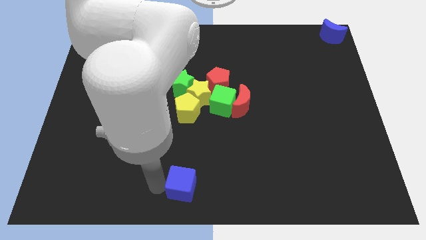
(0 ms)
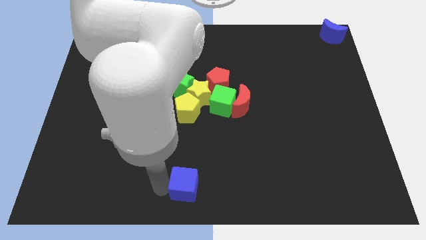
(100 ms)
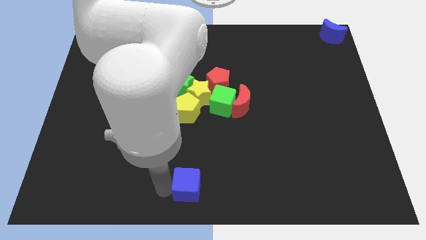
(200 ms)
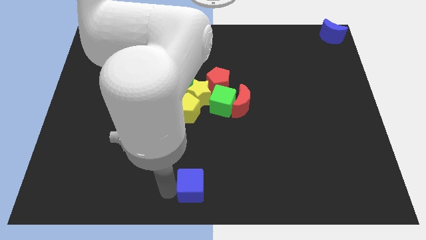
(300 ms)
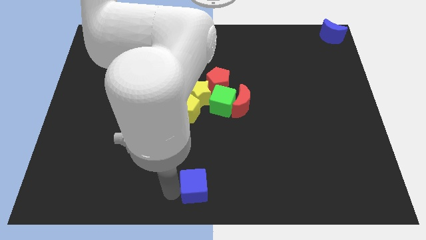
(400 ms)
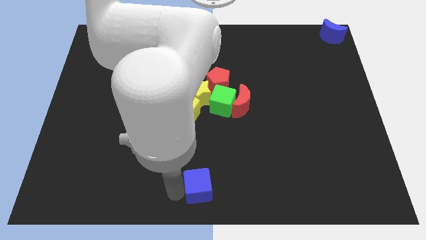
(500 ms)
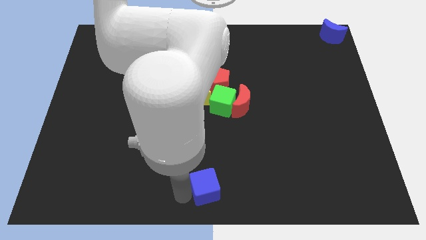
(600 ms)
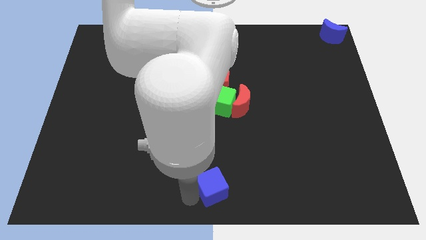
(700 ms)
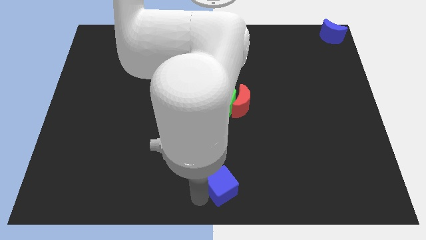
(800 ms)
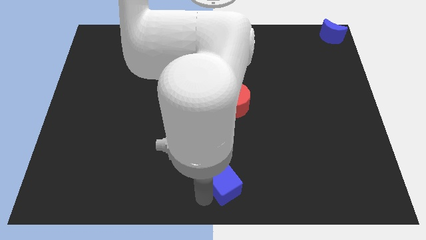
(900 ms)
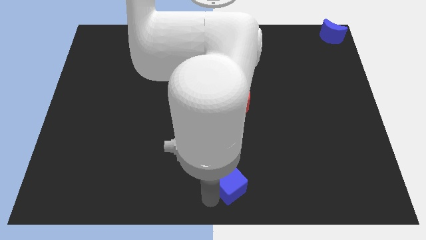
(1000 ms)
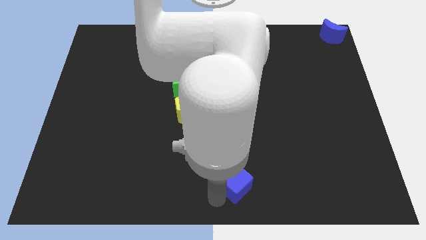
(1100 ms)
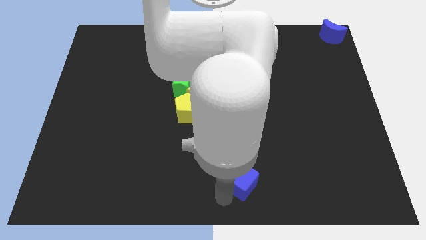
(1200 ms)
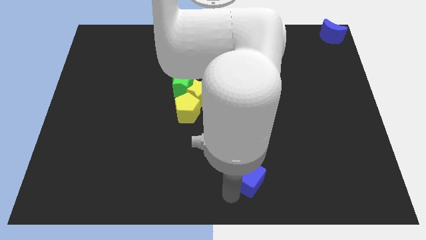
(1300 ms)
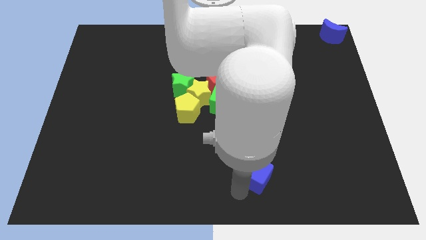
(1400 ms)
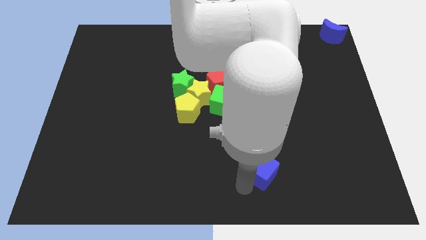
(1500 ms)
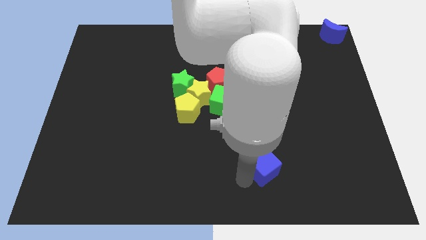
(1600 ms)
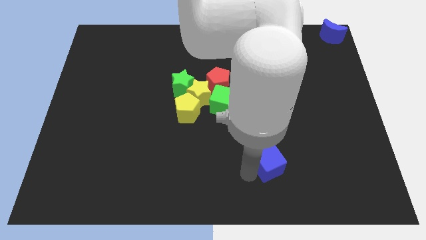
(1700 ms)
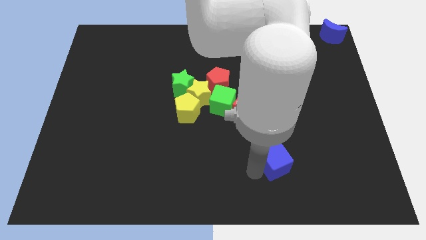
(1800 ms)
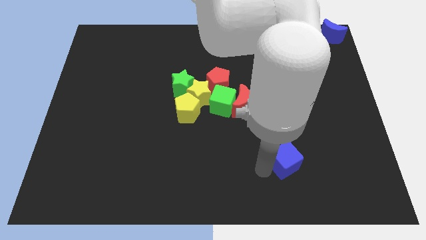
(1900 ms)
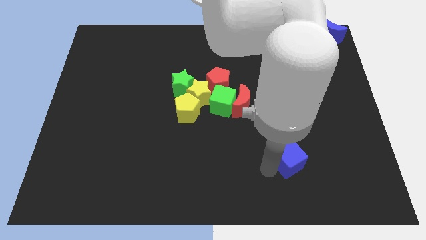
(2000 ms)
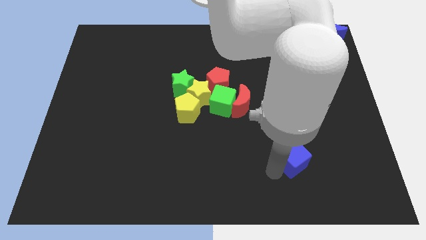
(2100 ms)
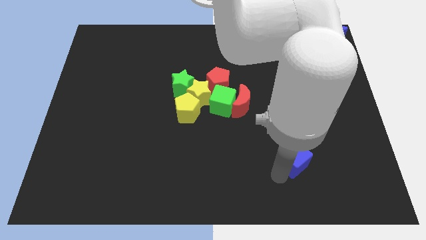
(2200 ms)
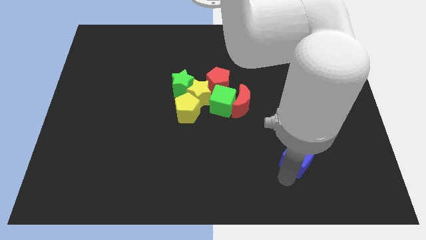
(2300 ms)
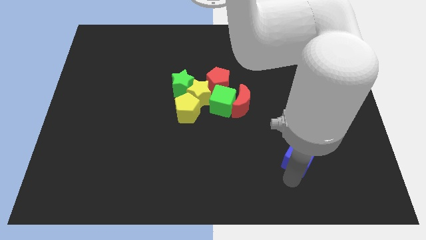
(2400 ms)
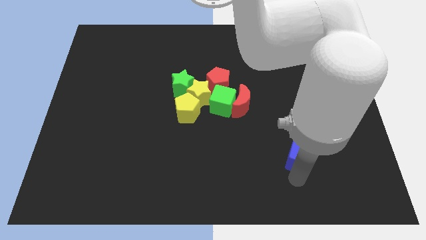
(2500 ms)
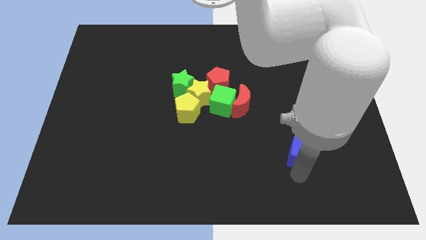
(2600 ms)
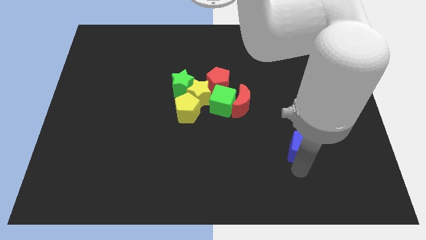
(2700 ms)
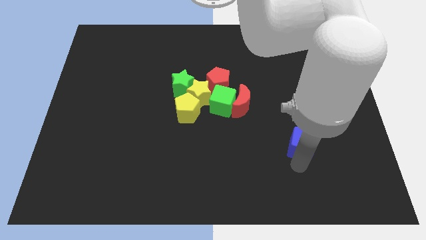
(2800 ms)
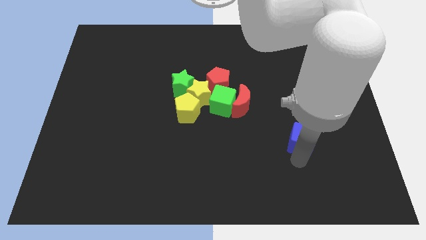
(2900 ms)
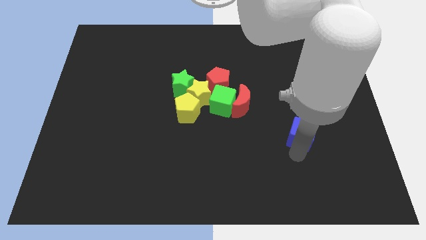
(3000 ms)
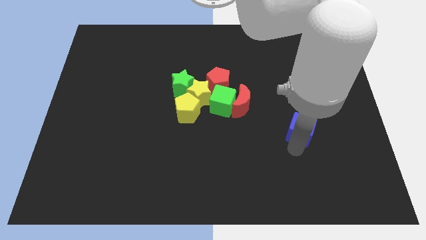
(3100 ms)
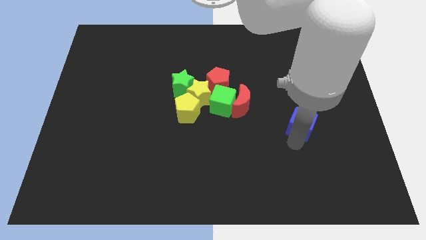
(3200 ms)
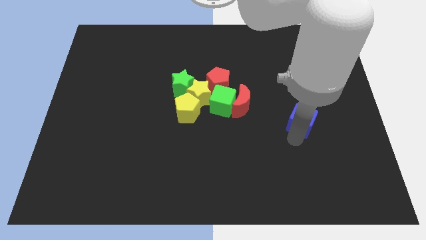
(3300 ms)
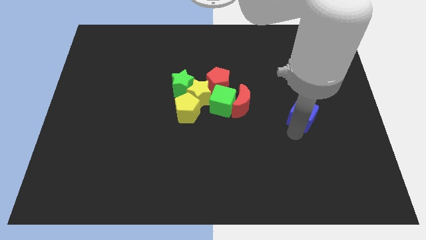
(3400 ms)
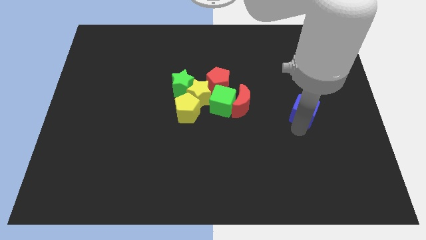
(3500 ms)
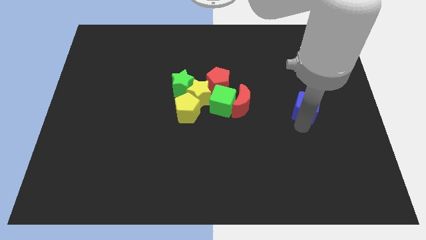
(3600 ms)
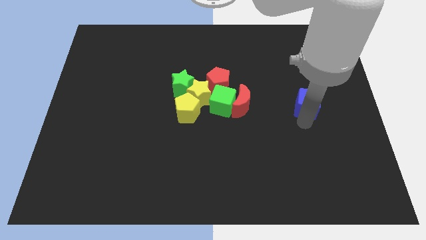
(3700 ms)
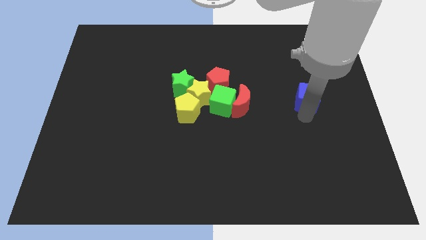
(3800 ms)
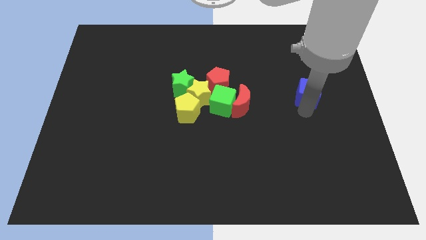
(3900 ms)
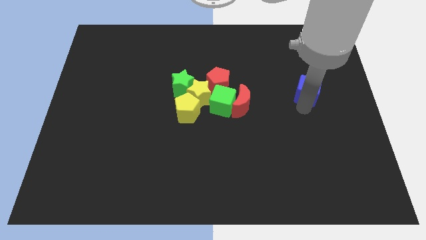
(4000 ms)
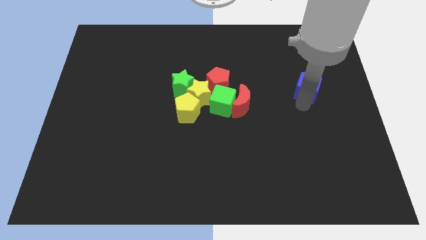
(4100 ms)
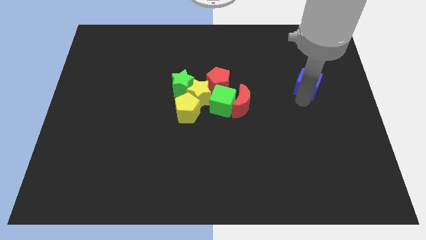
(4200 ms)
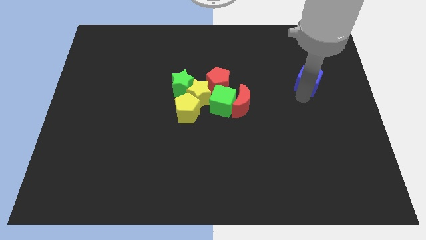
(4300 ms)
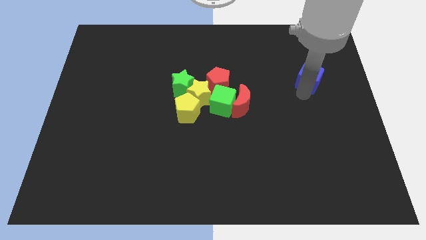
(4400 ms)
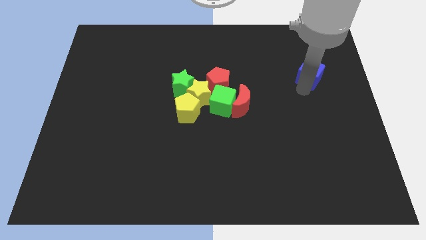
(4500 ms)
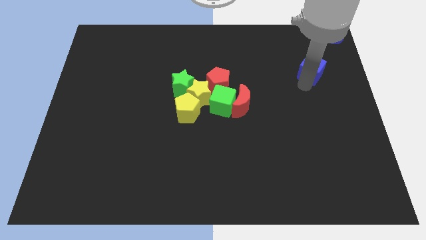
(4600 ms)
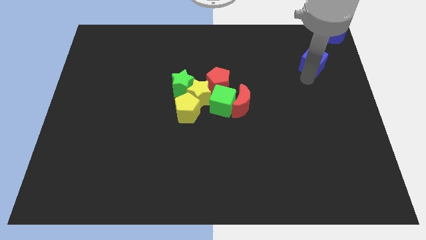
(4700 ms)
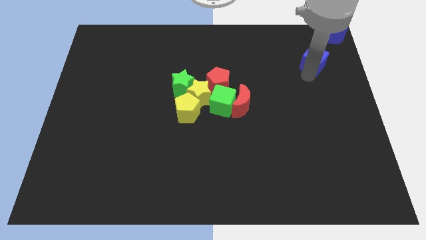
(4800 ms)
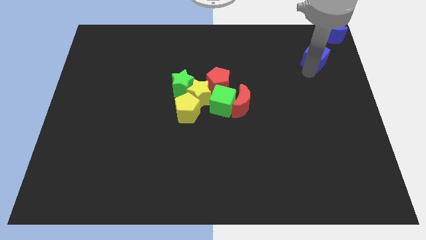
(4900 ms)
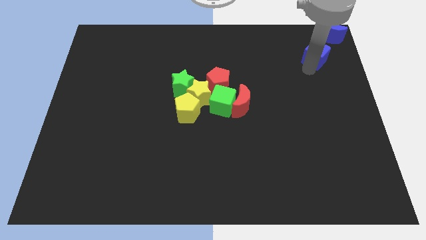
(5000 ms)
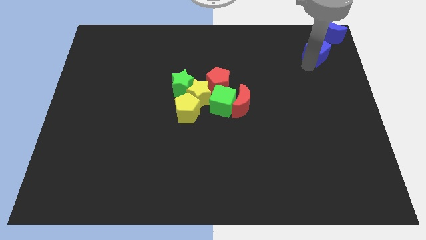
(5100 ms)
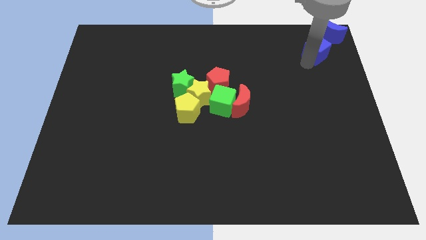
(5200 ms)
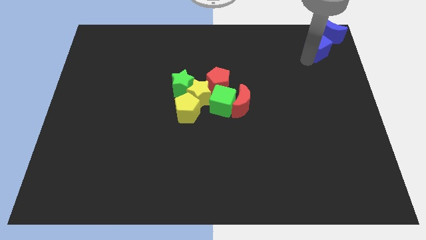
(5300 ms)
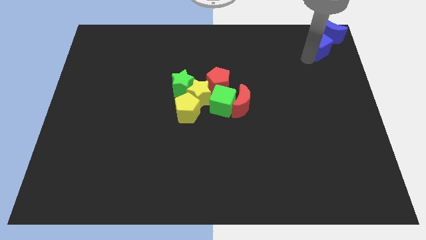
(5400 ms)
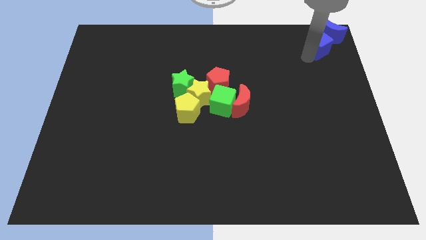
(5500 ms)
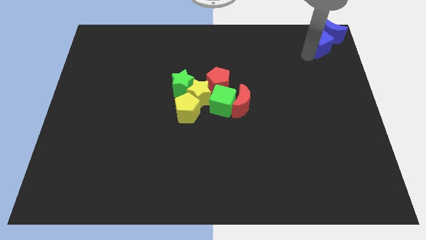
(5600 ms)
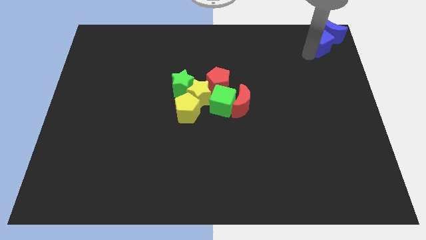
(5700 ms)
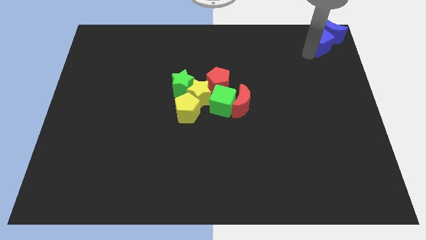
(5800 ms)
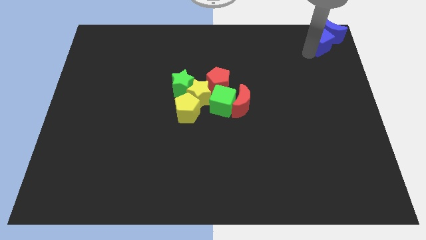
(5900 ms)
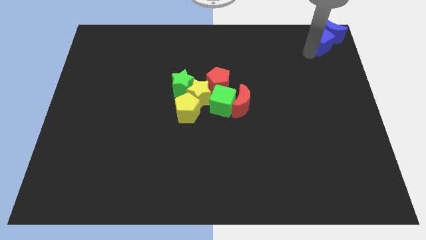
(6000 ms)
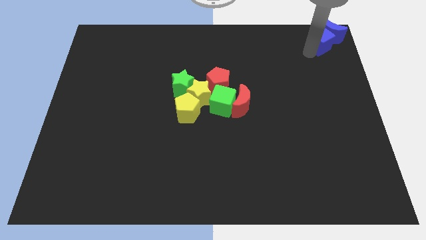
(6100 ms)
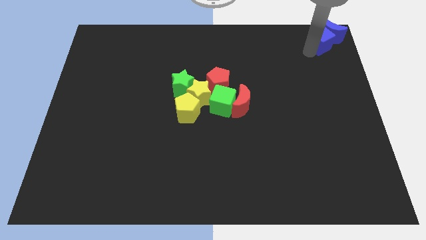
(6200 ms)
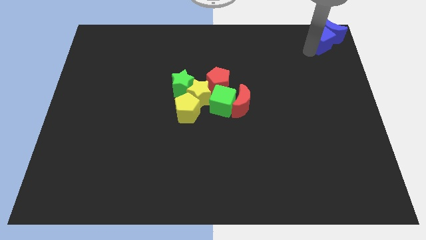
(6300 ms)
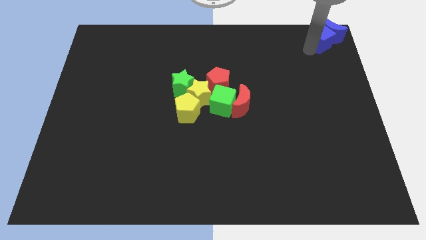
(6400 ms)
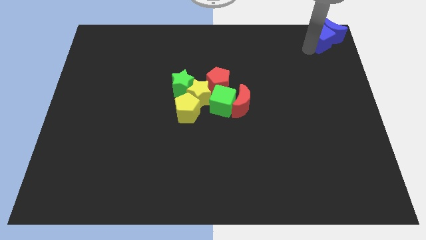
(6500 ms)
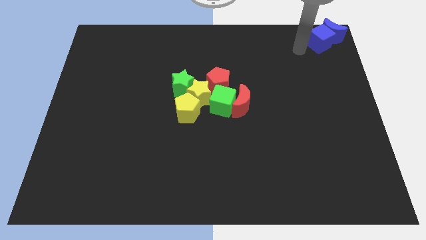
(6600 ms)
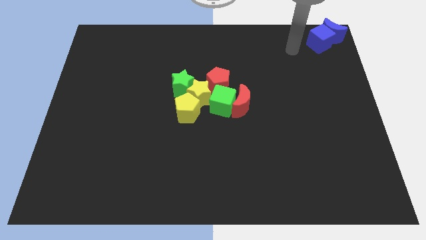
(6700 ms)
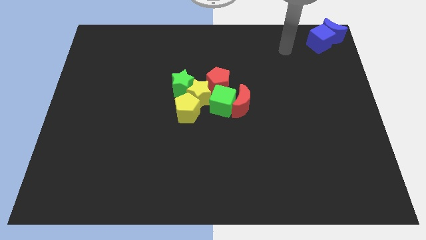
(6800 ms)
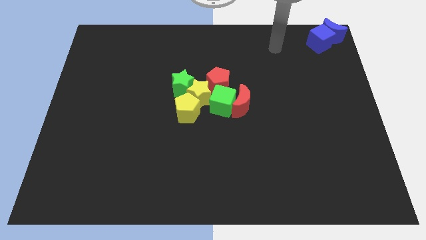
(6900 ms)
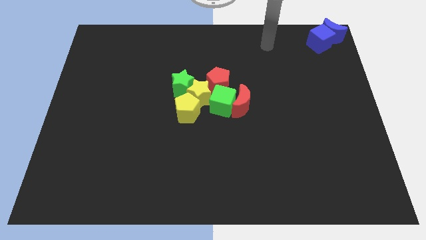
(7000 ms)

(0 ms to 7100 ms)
move the blue cube towards the below the blue crescent

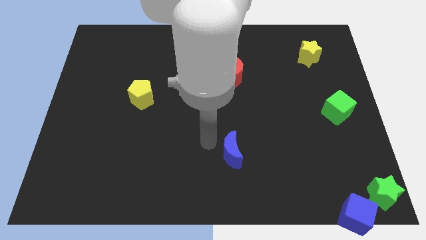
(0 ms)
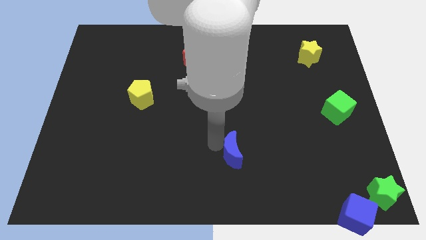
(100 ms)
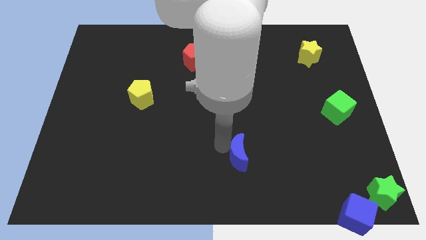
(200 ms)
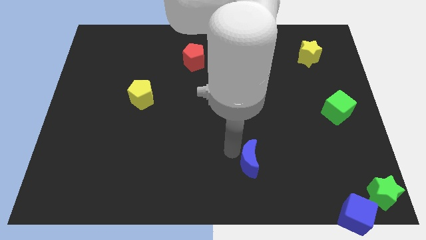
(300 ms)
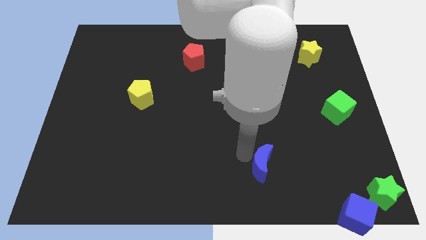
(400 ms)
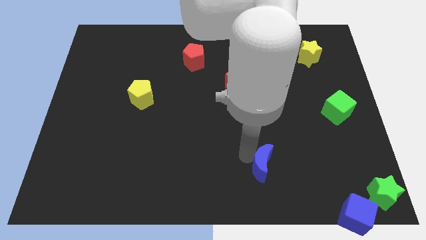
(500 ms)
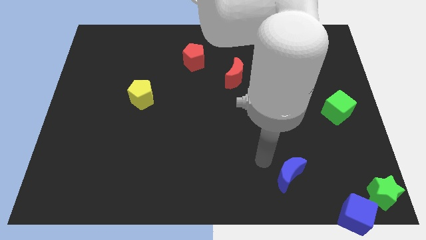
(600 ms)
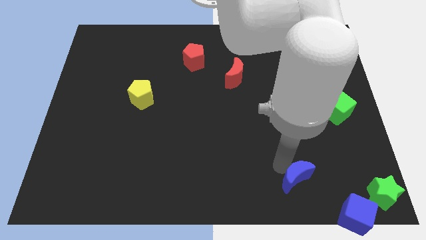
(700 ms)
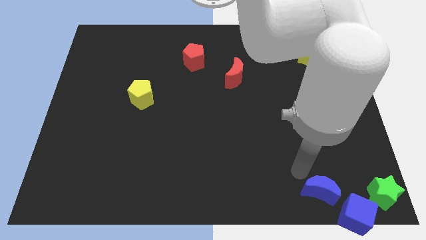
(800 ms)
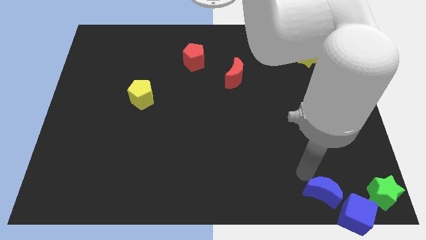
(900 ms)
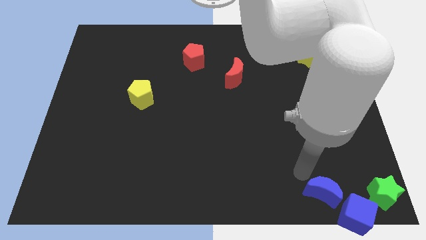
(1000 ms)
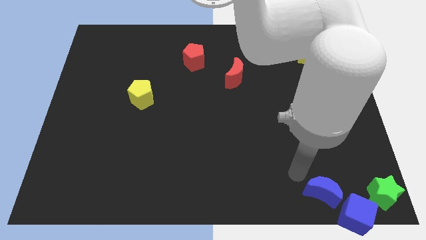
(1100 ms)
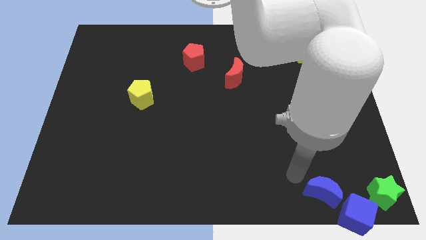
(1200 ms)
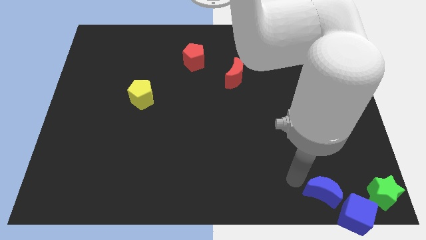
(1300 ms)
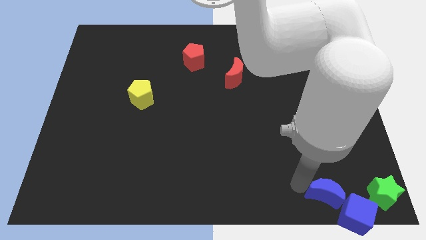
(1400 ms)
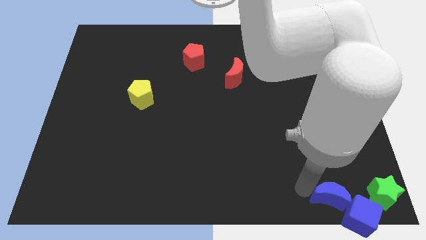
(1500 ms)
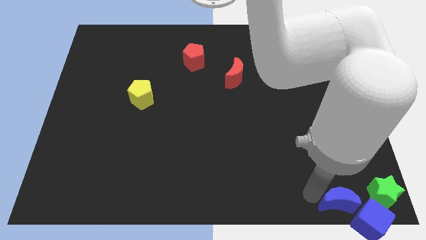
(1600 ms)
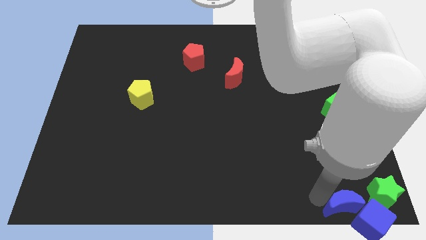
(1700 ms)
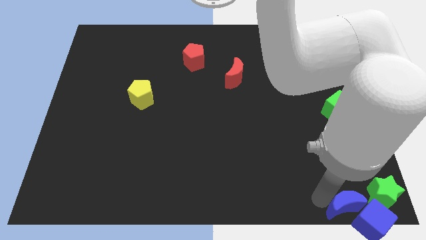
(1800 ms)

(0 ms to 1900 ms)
push the blue crescent into blue cube

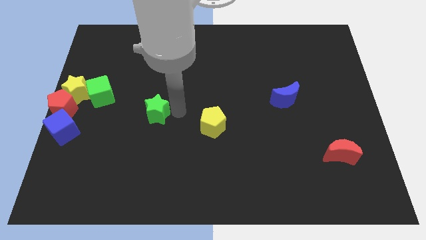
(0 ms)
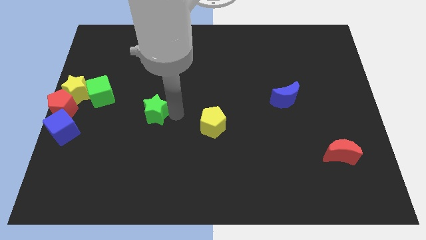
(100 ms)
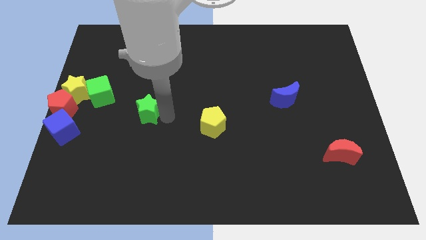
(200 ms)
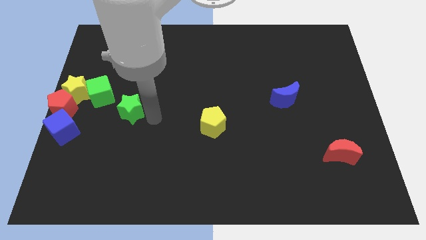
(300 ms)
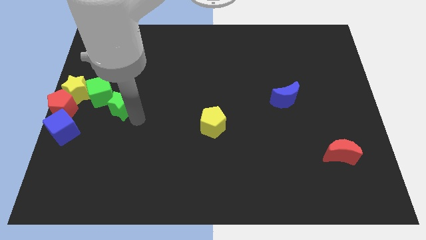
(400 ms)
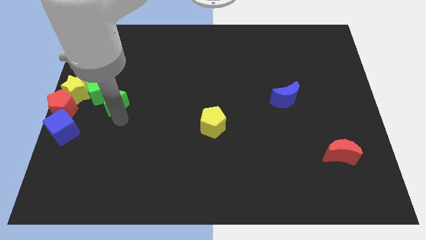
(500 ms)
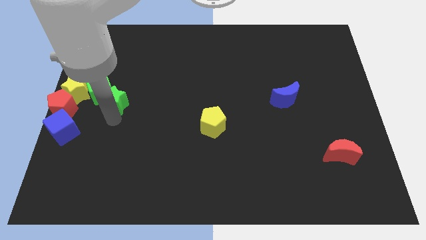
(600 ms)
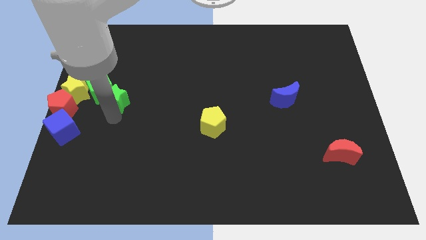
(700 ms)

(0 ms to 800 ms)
push the green star into the green cube
